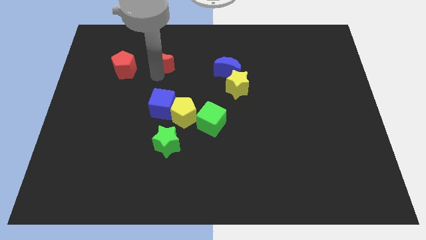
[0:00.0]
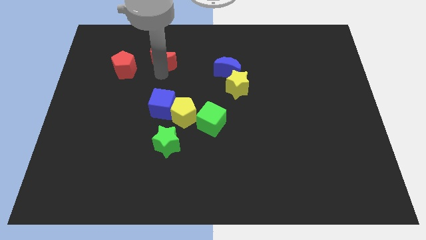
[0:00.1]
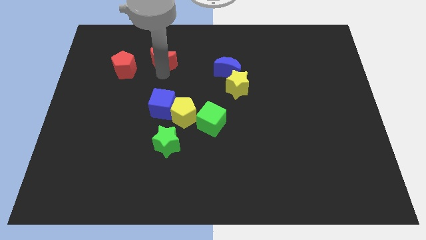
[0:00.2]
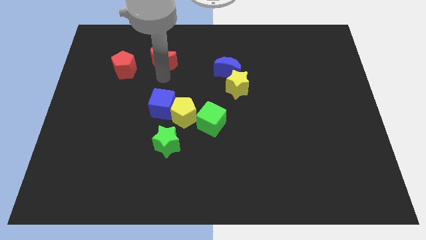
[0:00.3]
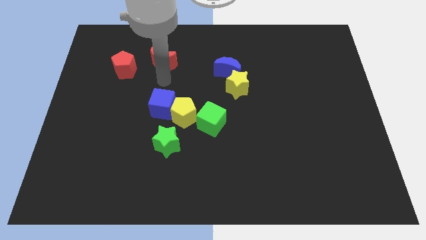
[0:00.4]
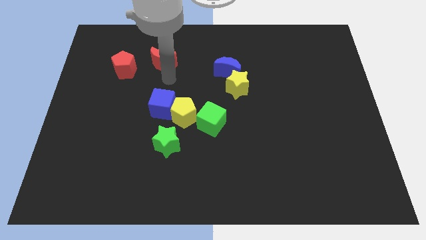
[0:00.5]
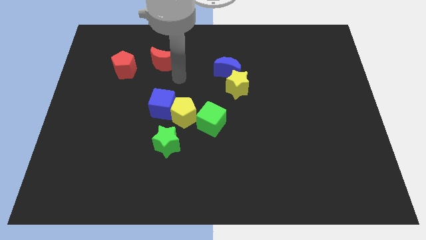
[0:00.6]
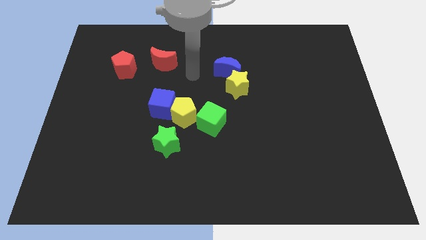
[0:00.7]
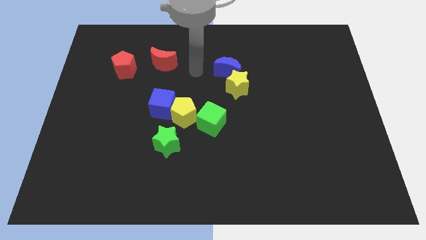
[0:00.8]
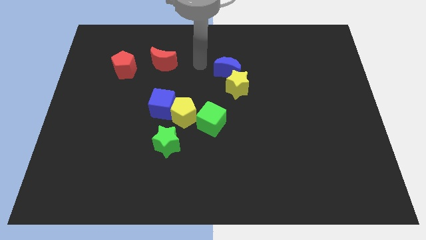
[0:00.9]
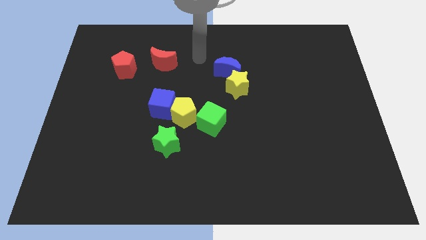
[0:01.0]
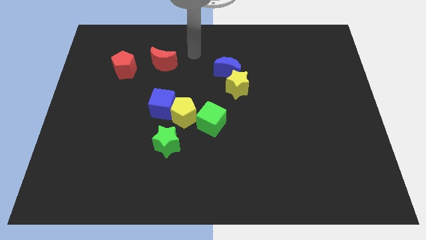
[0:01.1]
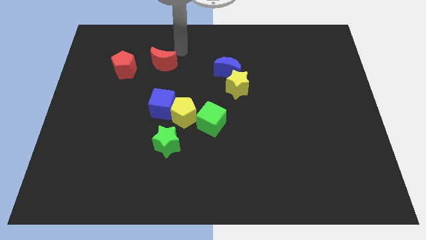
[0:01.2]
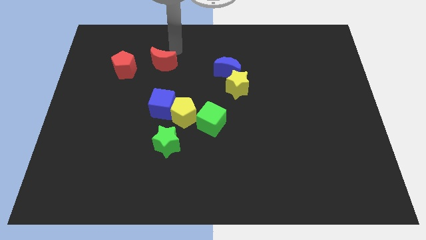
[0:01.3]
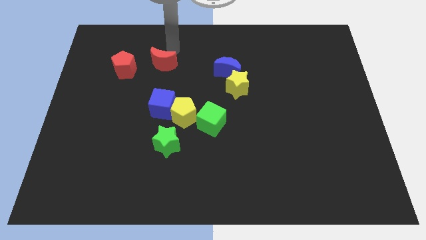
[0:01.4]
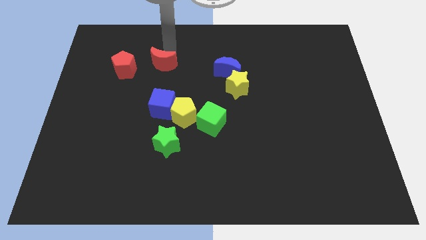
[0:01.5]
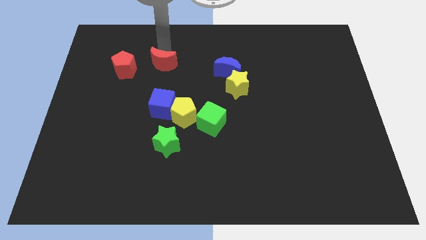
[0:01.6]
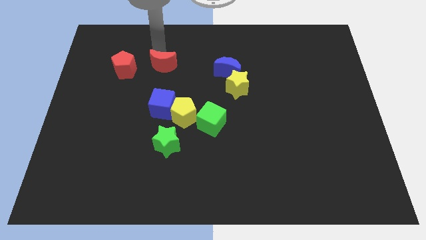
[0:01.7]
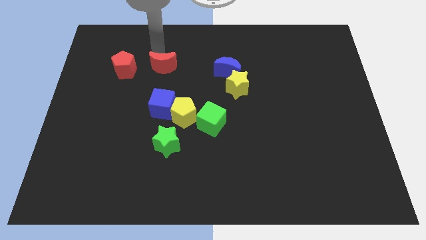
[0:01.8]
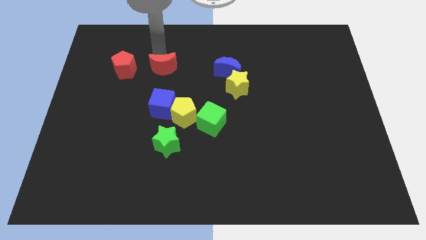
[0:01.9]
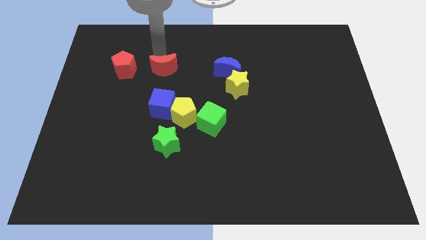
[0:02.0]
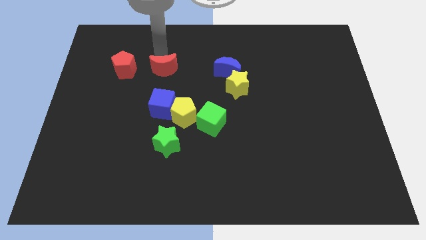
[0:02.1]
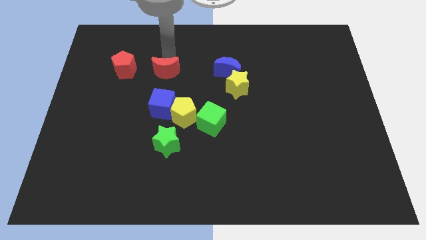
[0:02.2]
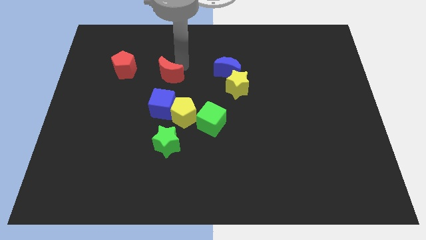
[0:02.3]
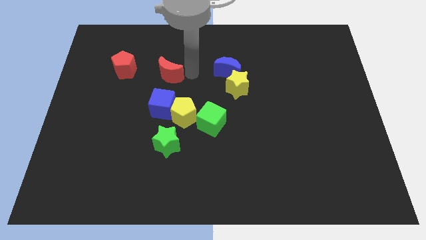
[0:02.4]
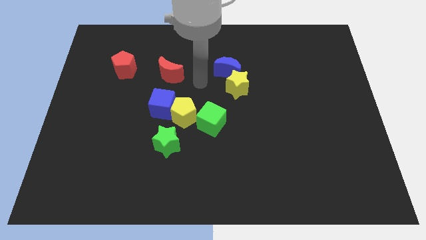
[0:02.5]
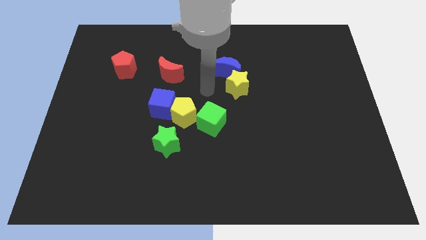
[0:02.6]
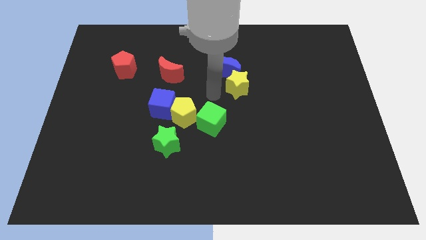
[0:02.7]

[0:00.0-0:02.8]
place the red moon in between the red pentagon and blue semicircle

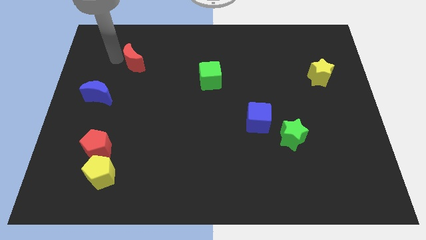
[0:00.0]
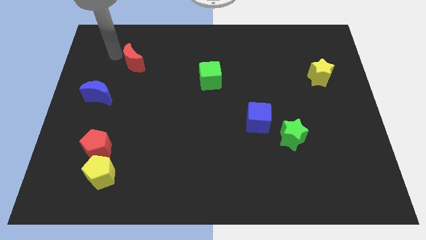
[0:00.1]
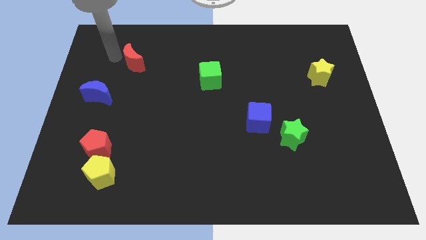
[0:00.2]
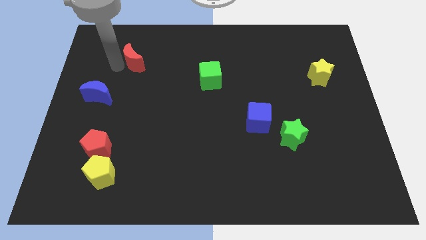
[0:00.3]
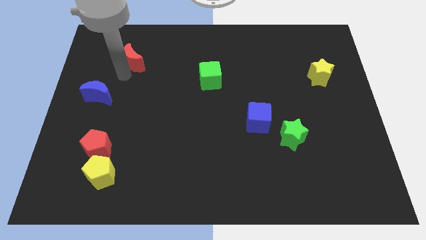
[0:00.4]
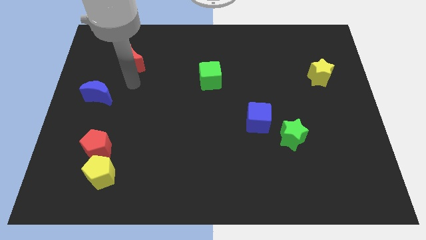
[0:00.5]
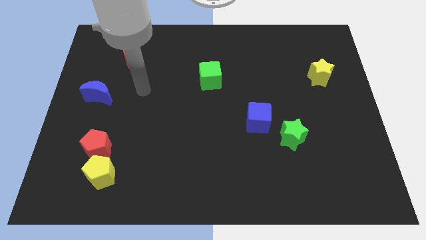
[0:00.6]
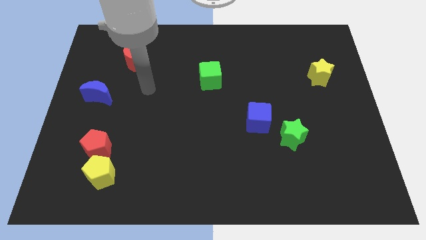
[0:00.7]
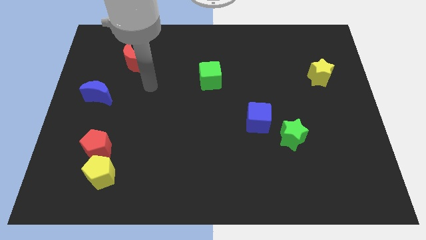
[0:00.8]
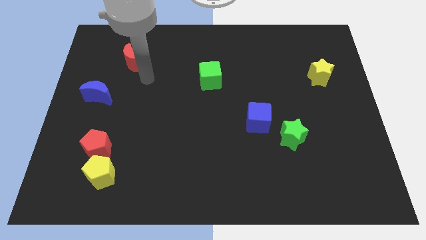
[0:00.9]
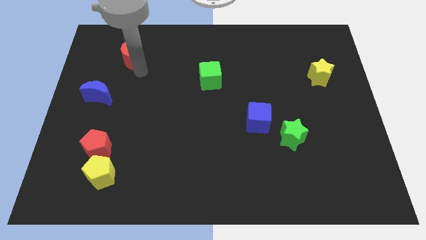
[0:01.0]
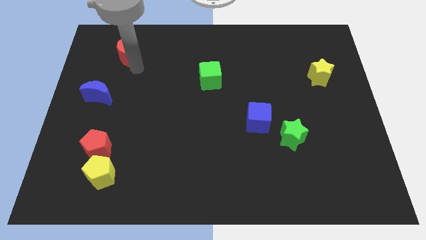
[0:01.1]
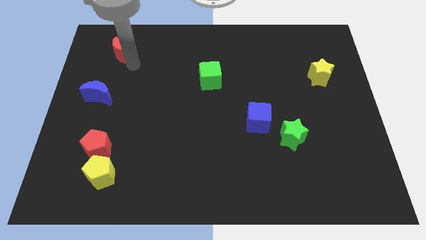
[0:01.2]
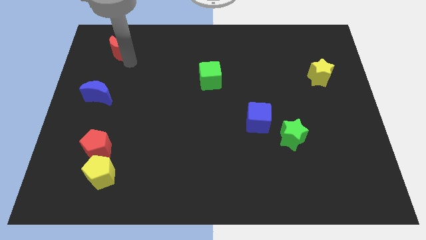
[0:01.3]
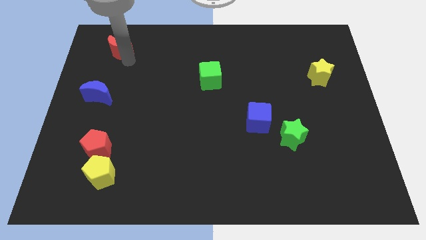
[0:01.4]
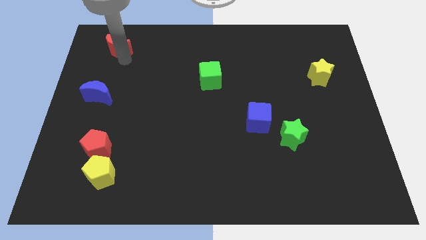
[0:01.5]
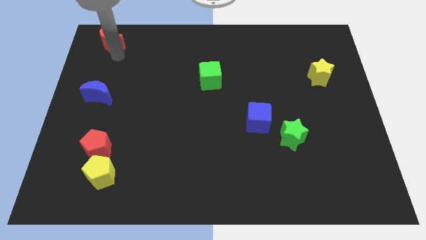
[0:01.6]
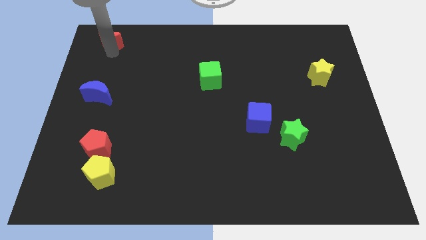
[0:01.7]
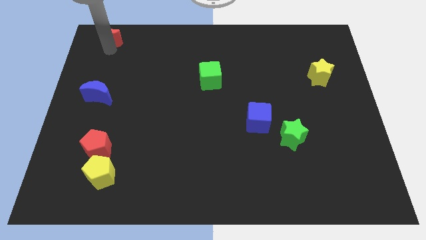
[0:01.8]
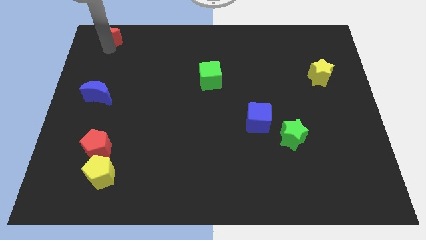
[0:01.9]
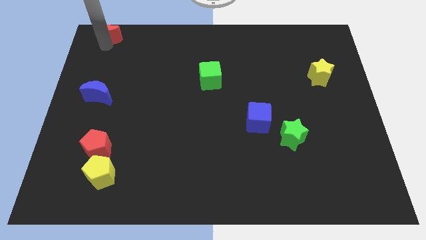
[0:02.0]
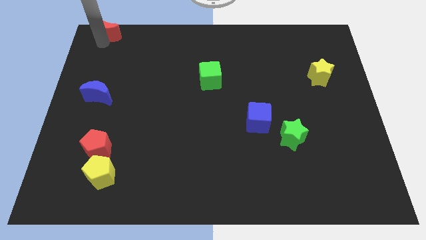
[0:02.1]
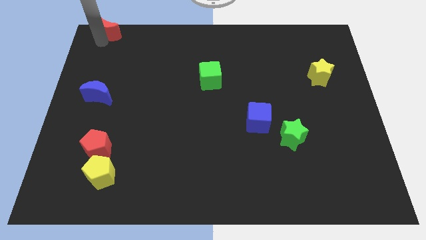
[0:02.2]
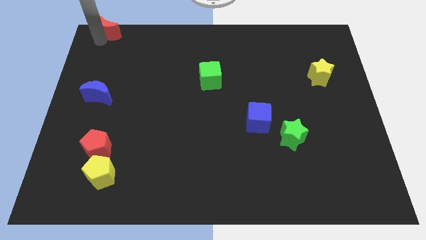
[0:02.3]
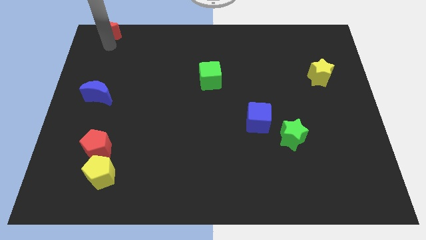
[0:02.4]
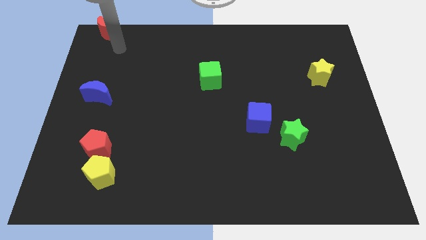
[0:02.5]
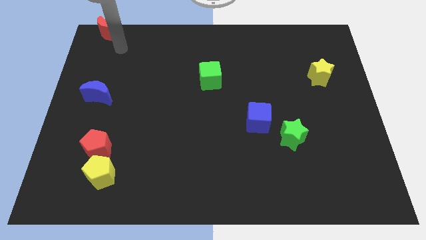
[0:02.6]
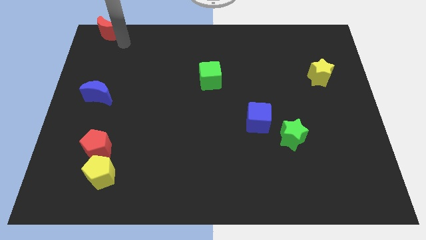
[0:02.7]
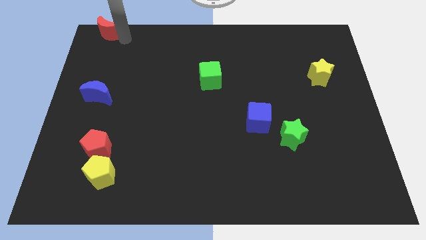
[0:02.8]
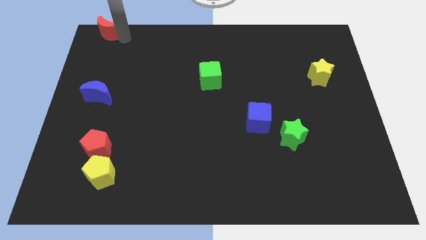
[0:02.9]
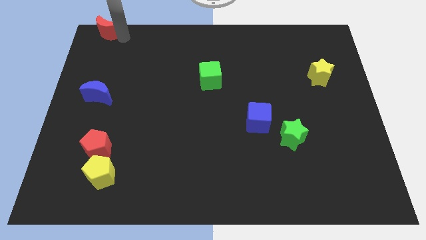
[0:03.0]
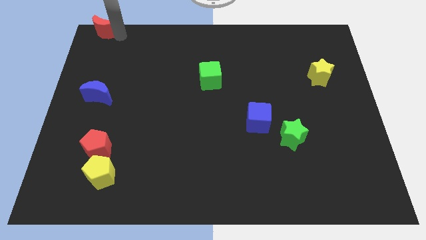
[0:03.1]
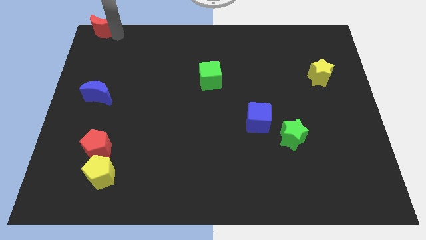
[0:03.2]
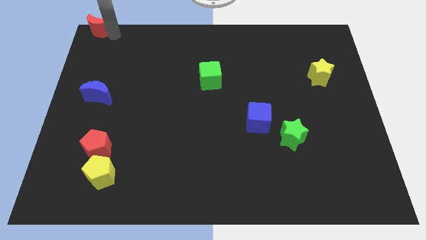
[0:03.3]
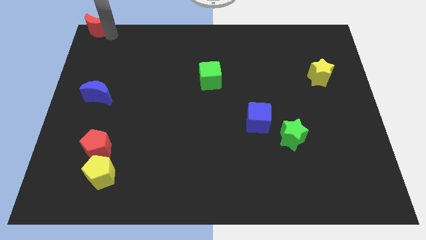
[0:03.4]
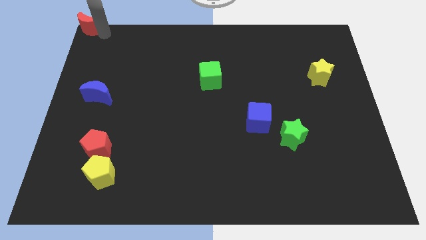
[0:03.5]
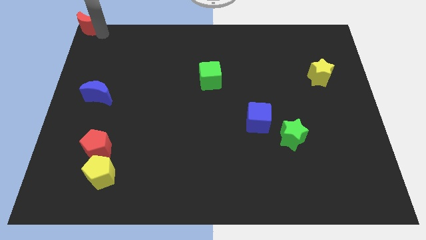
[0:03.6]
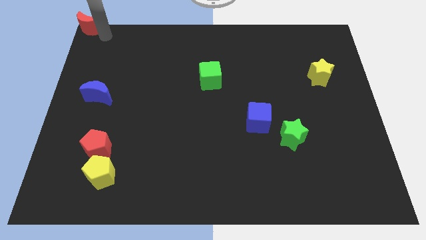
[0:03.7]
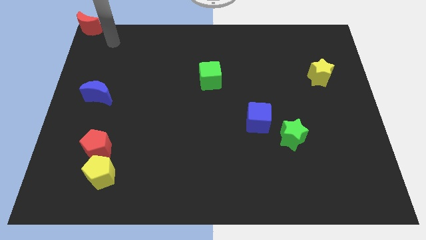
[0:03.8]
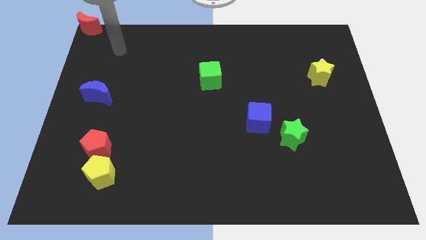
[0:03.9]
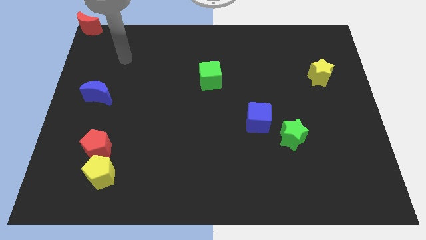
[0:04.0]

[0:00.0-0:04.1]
place the red crescent at the top left corner of the board

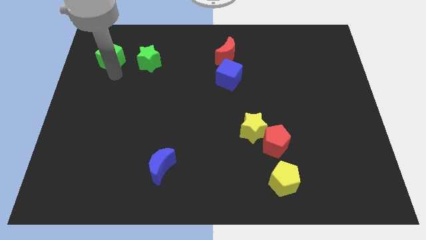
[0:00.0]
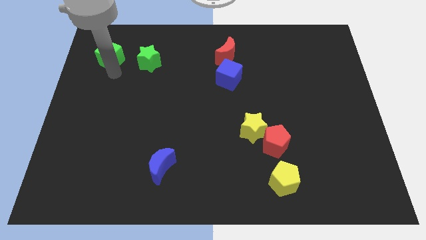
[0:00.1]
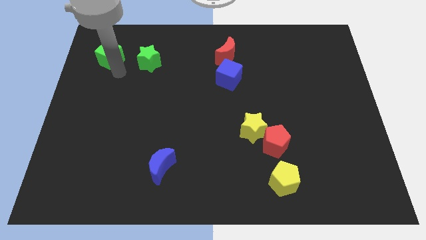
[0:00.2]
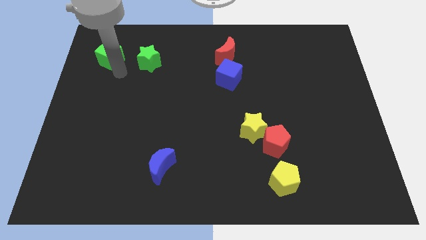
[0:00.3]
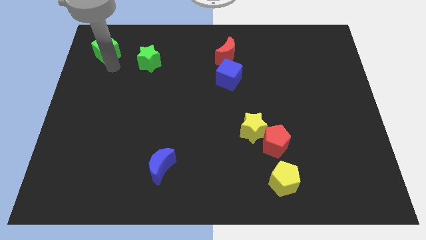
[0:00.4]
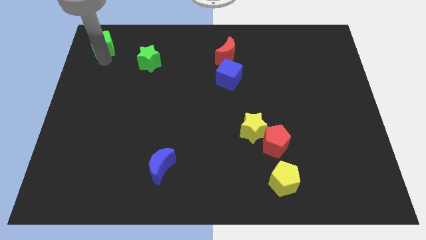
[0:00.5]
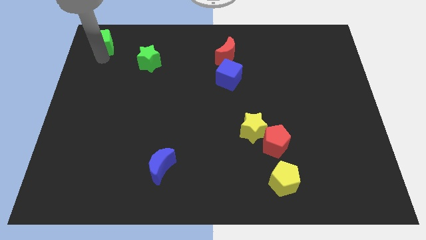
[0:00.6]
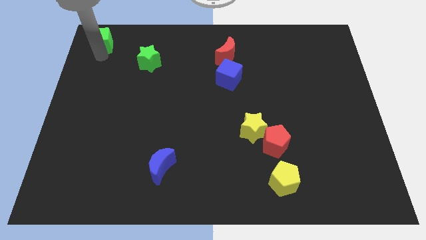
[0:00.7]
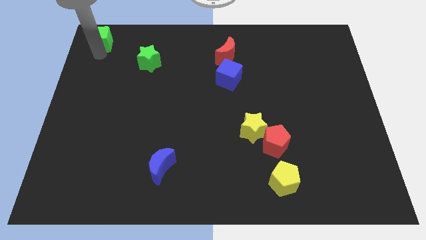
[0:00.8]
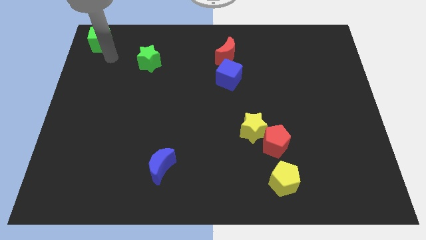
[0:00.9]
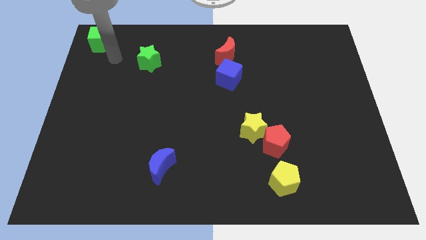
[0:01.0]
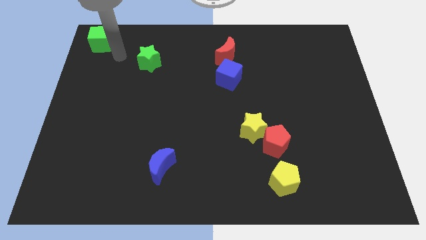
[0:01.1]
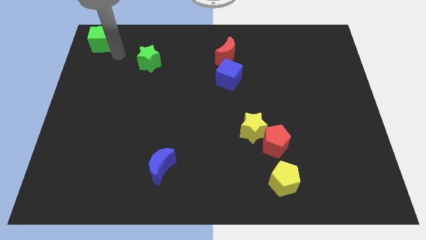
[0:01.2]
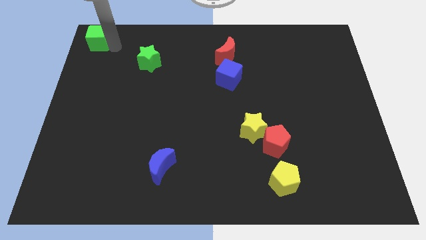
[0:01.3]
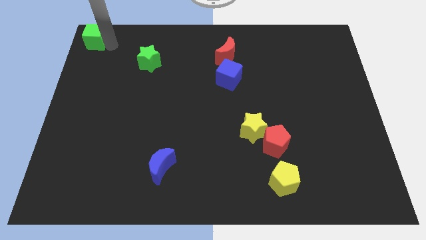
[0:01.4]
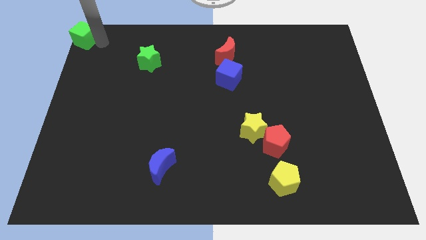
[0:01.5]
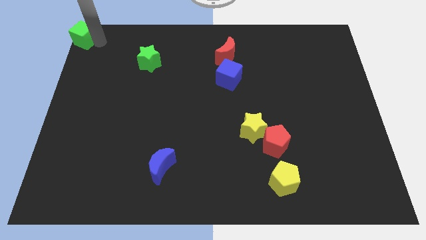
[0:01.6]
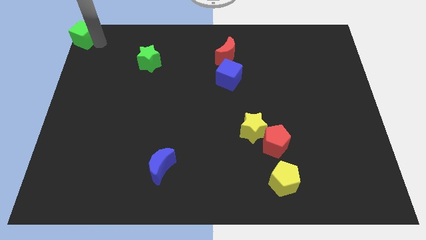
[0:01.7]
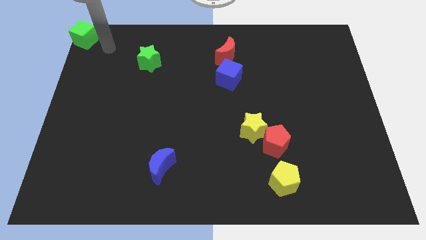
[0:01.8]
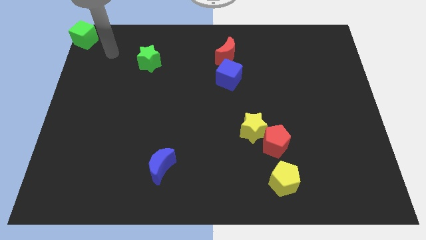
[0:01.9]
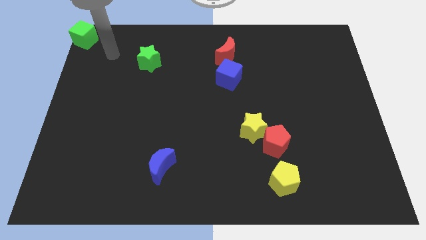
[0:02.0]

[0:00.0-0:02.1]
push green cube to the top left

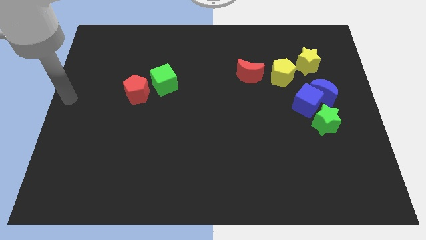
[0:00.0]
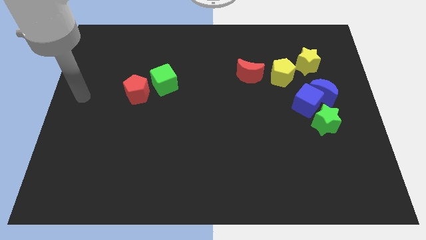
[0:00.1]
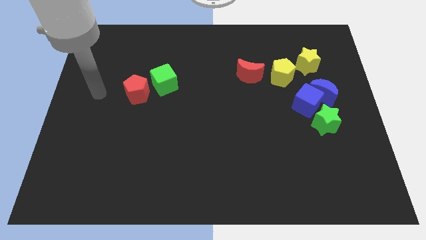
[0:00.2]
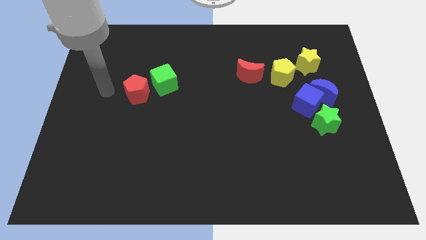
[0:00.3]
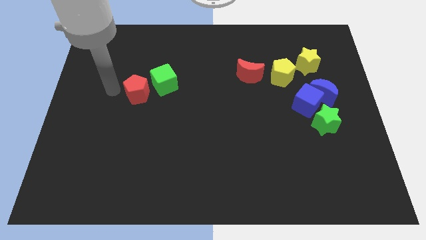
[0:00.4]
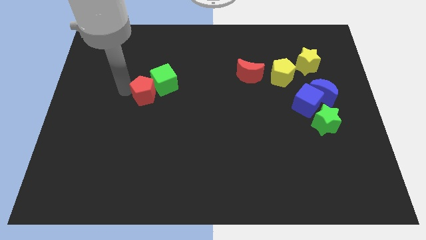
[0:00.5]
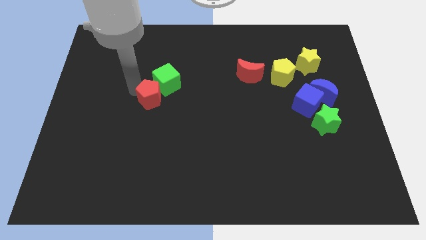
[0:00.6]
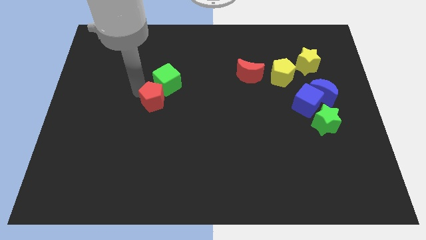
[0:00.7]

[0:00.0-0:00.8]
push red pentagon in to green cube
